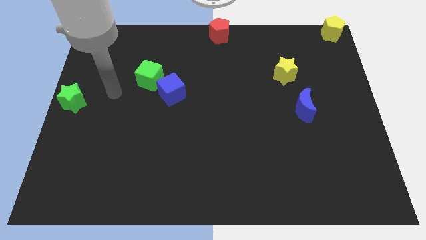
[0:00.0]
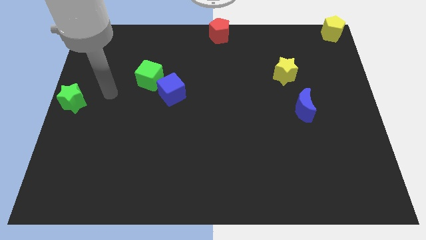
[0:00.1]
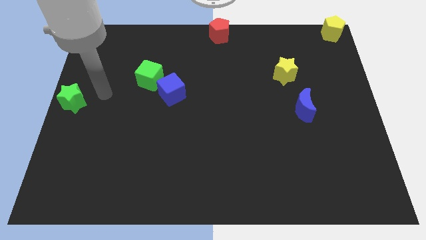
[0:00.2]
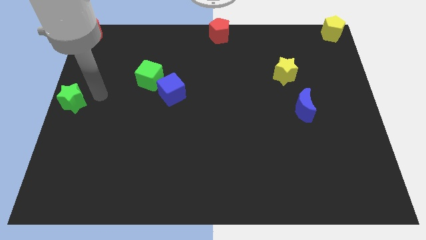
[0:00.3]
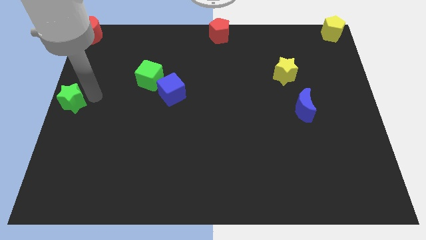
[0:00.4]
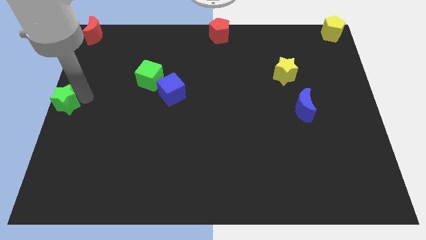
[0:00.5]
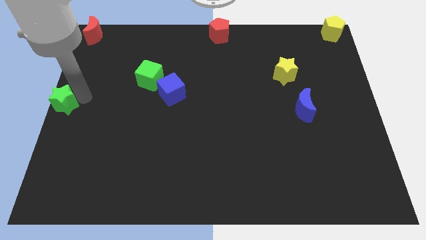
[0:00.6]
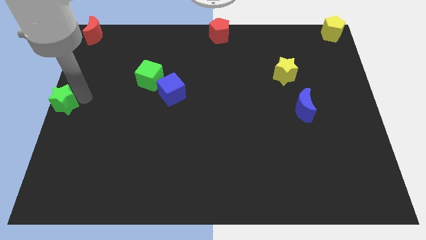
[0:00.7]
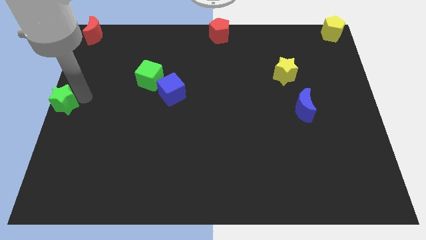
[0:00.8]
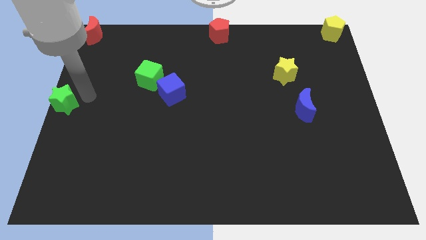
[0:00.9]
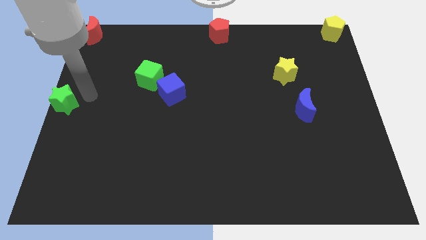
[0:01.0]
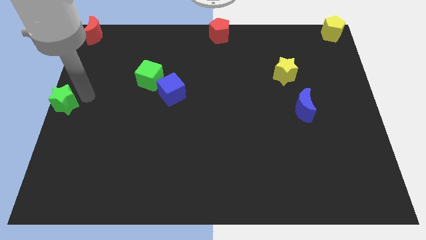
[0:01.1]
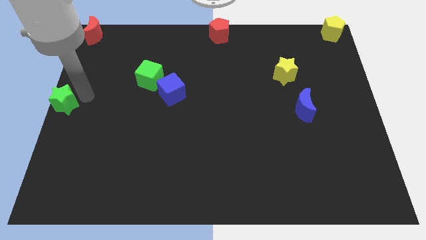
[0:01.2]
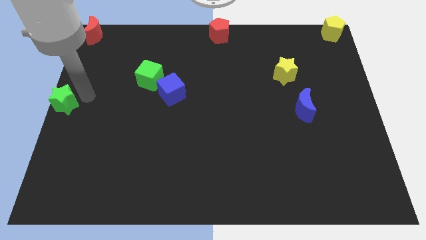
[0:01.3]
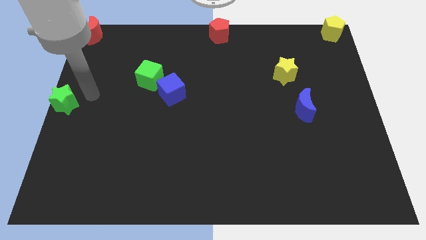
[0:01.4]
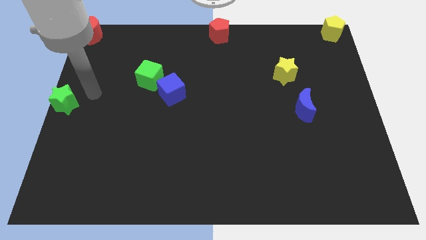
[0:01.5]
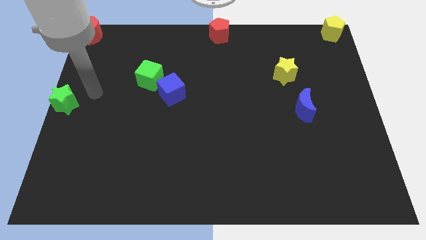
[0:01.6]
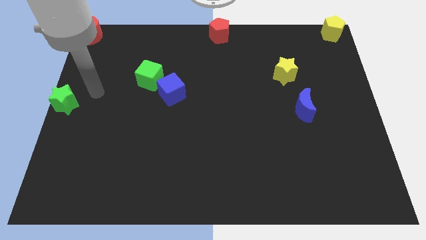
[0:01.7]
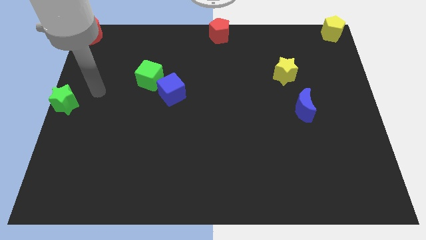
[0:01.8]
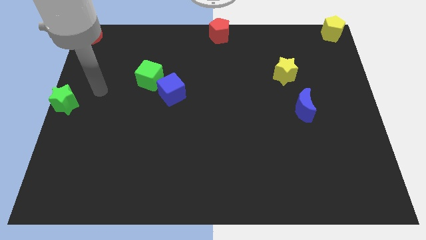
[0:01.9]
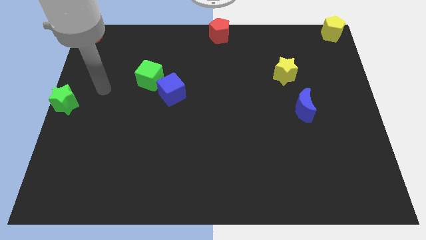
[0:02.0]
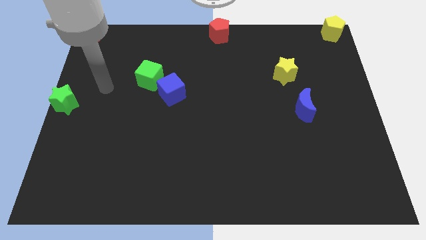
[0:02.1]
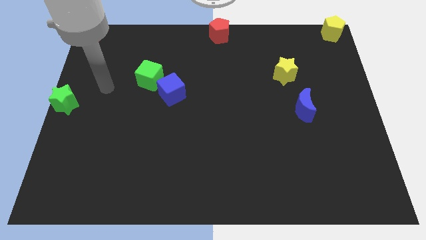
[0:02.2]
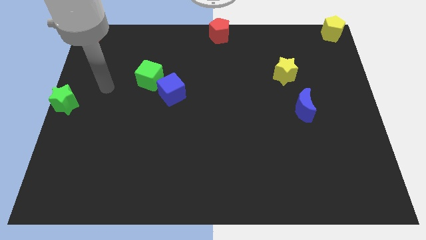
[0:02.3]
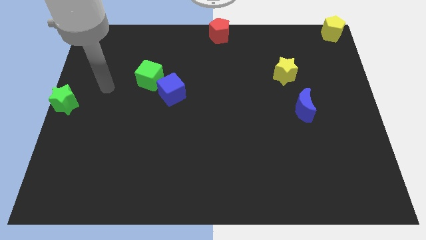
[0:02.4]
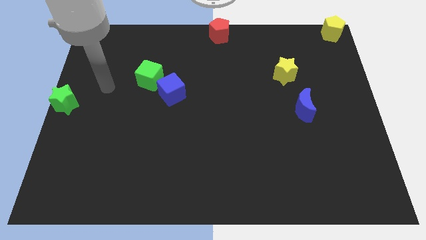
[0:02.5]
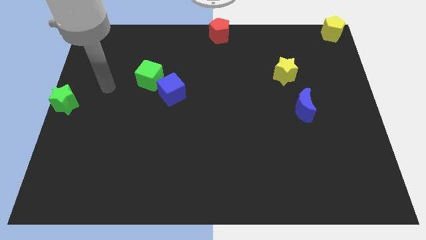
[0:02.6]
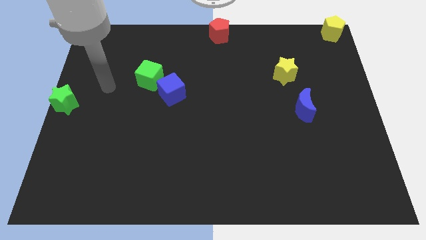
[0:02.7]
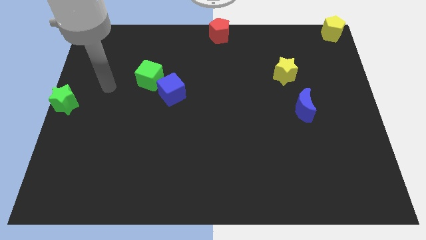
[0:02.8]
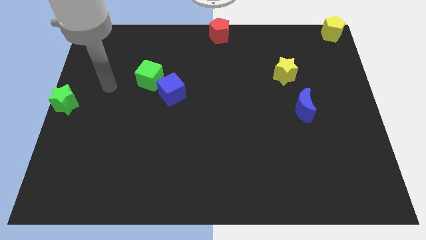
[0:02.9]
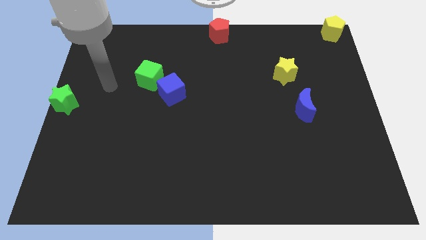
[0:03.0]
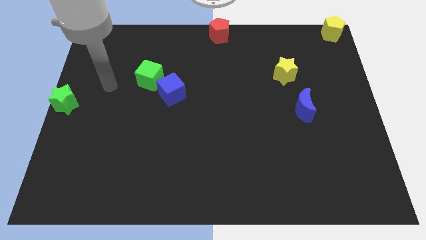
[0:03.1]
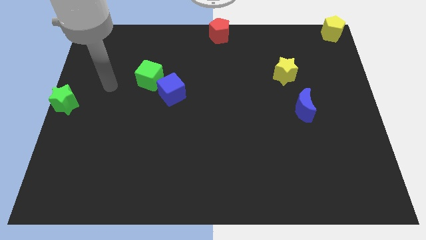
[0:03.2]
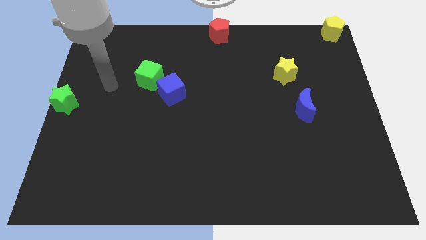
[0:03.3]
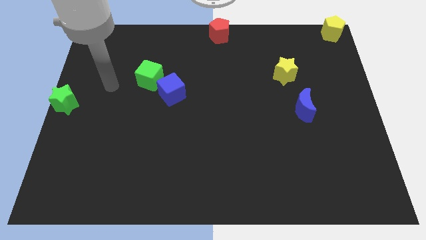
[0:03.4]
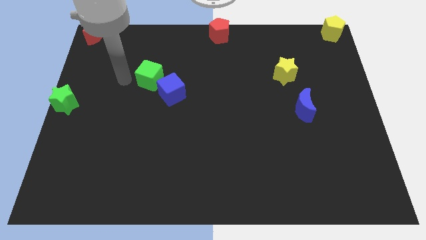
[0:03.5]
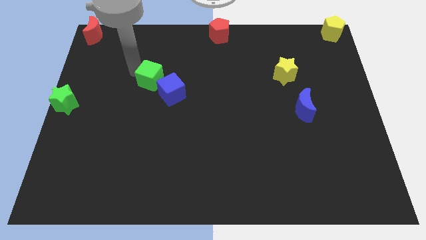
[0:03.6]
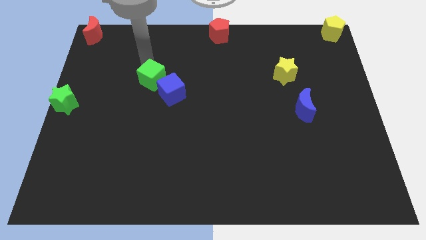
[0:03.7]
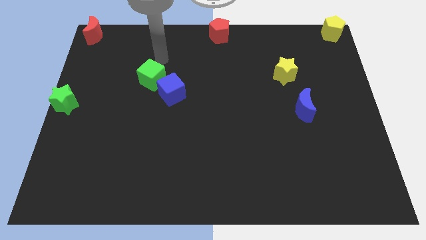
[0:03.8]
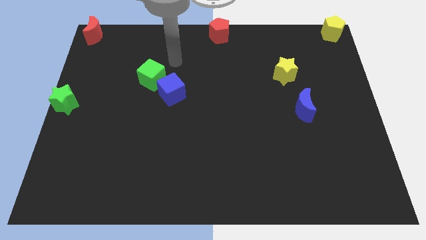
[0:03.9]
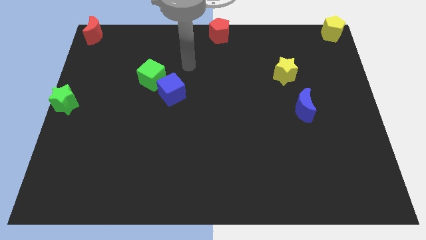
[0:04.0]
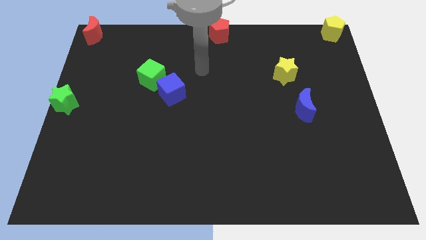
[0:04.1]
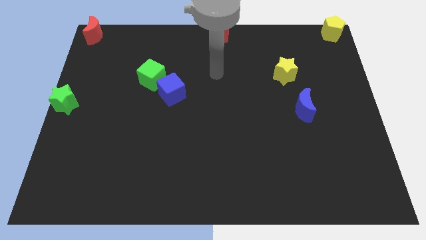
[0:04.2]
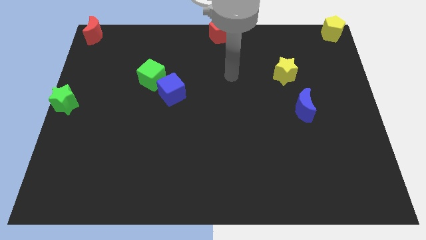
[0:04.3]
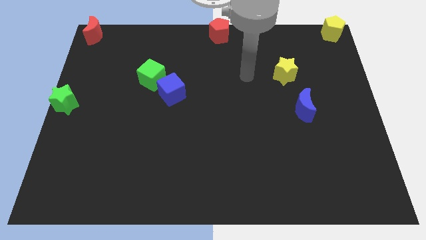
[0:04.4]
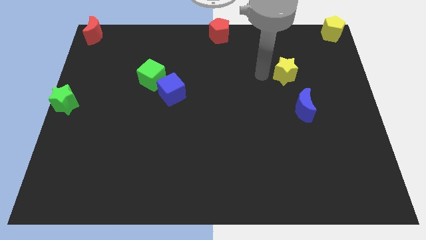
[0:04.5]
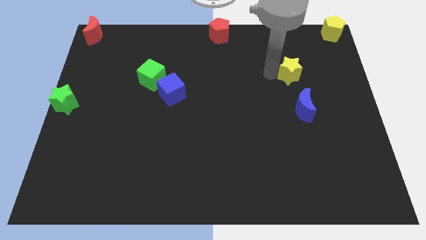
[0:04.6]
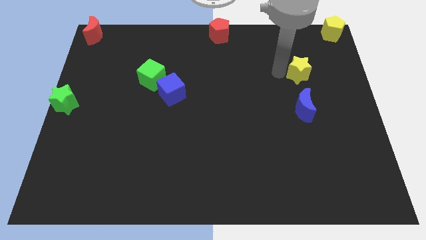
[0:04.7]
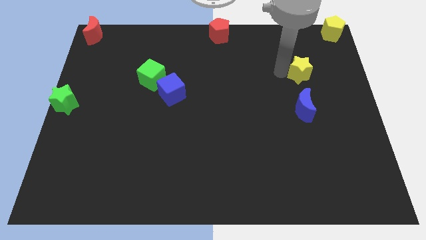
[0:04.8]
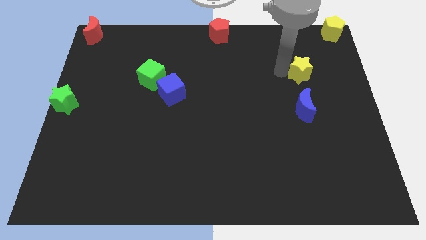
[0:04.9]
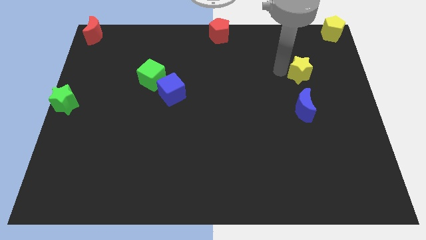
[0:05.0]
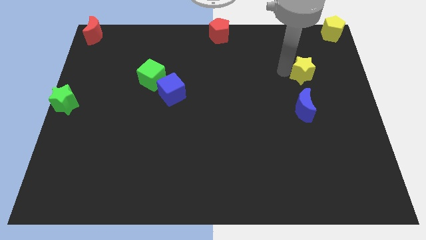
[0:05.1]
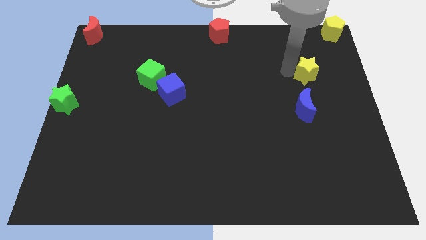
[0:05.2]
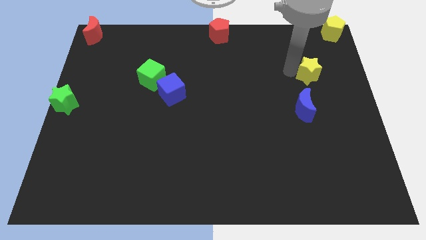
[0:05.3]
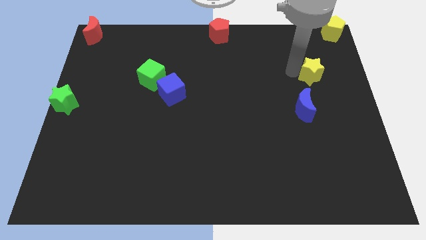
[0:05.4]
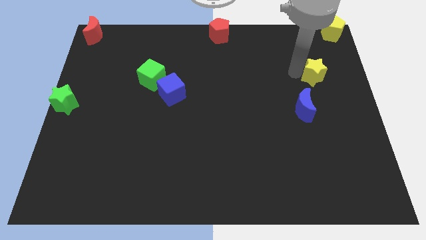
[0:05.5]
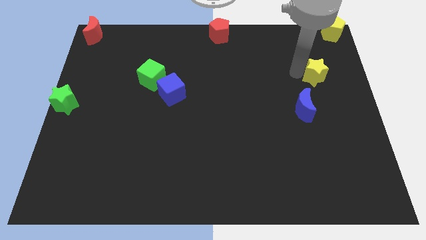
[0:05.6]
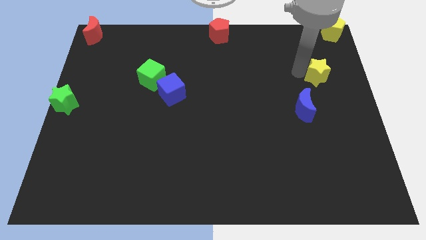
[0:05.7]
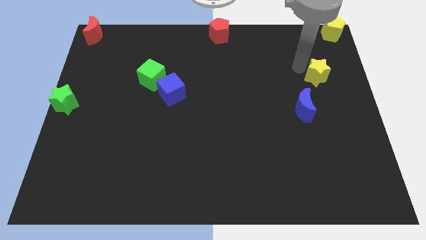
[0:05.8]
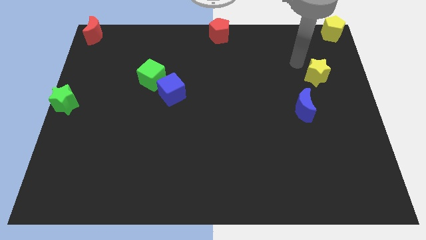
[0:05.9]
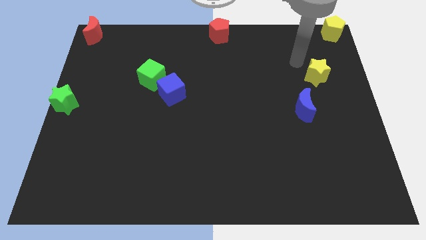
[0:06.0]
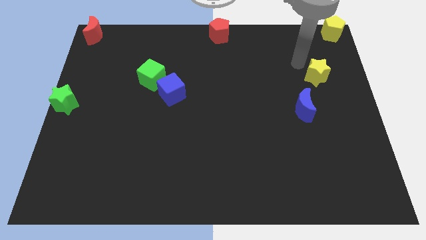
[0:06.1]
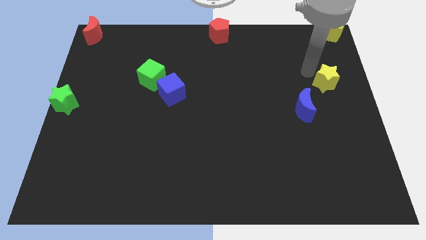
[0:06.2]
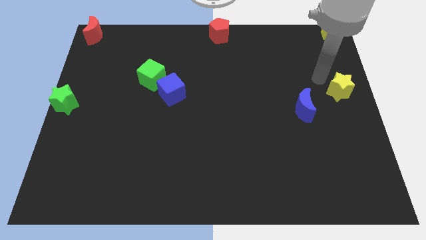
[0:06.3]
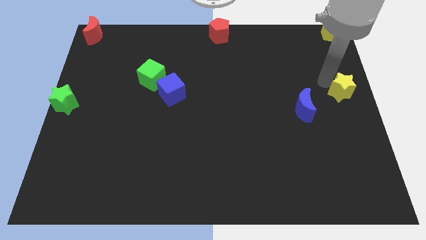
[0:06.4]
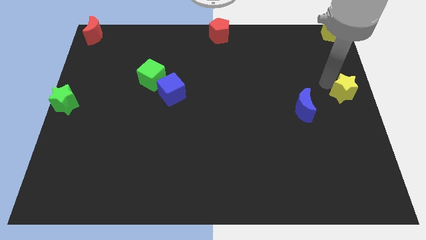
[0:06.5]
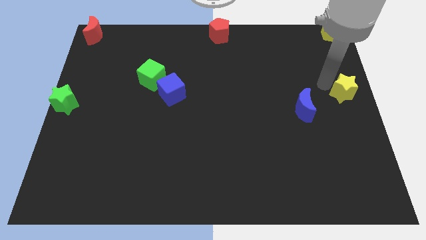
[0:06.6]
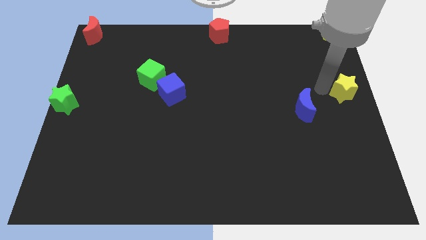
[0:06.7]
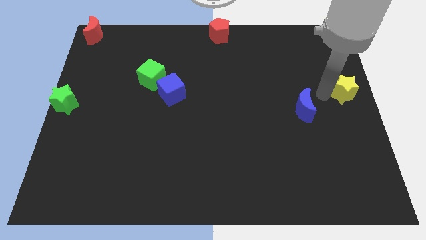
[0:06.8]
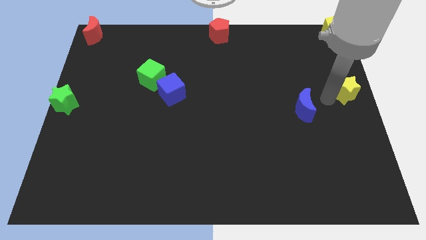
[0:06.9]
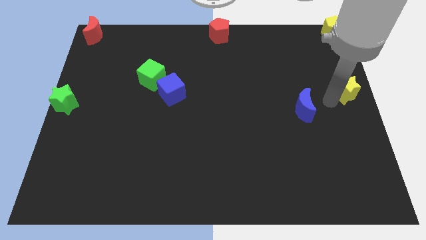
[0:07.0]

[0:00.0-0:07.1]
place the yellow star towards the center right of the board

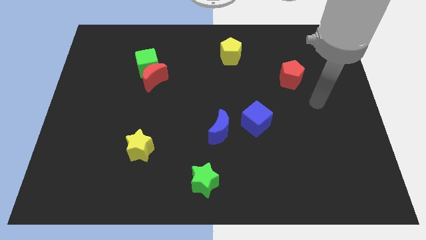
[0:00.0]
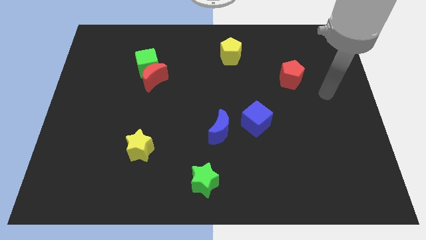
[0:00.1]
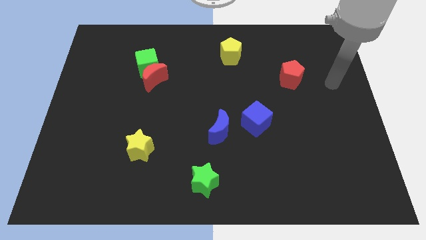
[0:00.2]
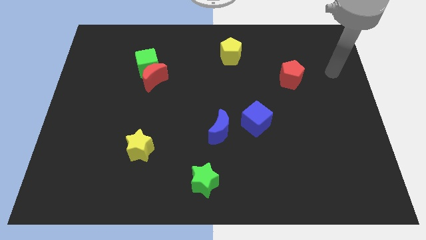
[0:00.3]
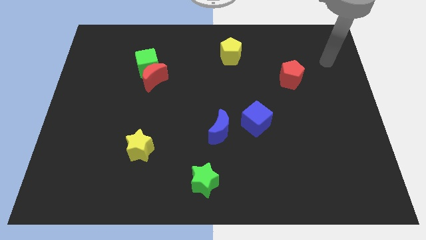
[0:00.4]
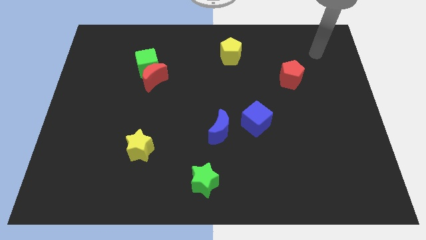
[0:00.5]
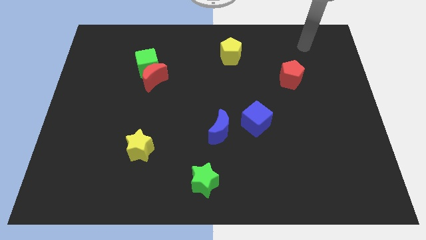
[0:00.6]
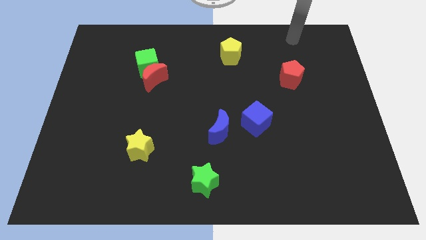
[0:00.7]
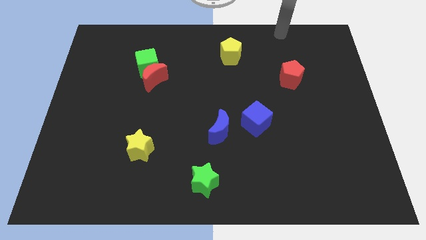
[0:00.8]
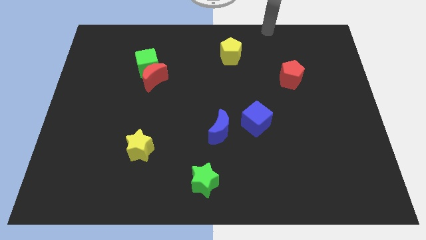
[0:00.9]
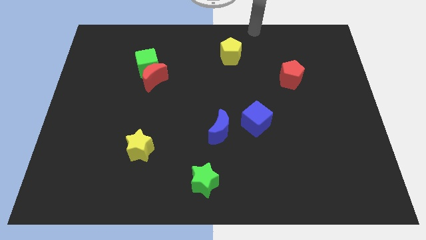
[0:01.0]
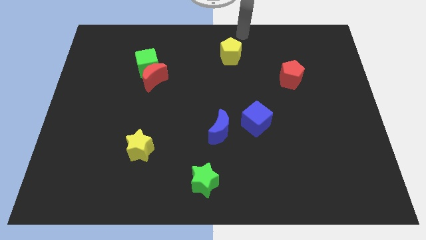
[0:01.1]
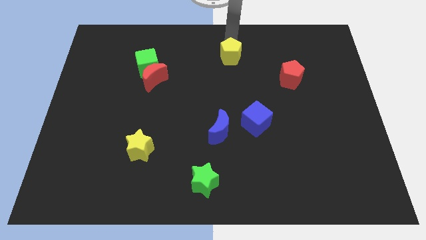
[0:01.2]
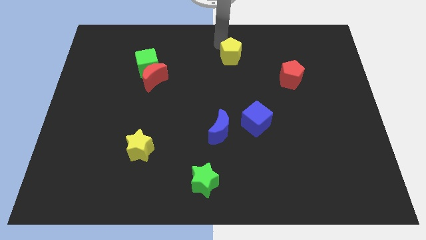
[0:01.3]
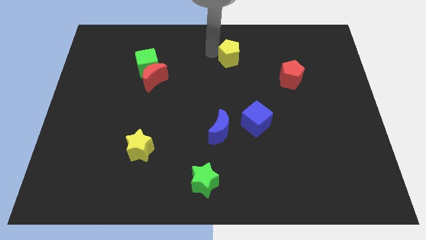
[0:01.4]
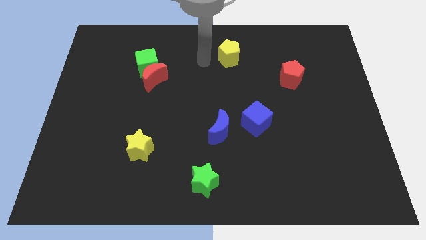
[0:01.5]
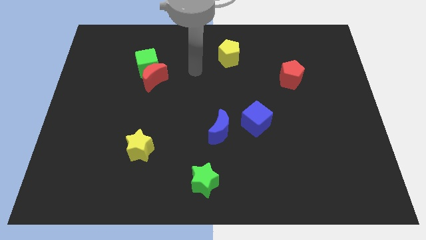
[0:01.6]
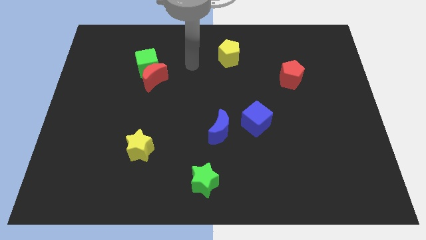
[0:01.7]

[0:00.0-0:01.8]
go and tap the yellow pentagon
